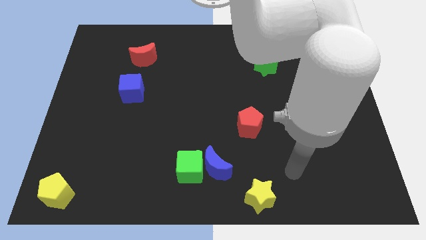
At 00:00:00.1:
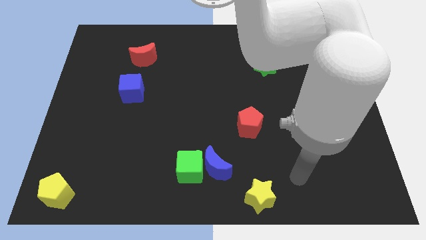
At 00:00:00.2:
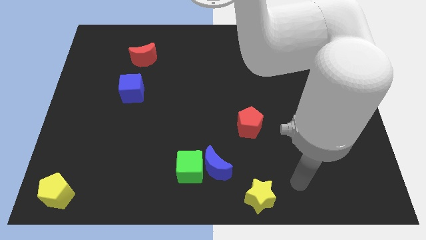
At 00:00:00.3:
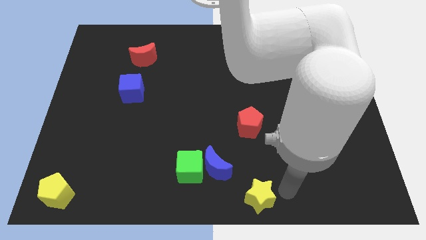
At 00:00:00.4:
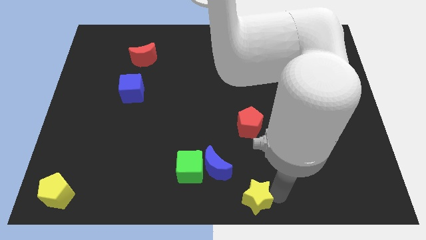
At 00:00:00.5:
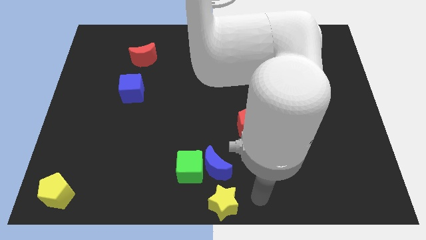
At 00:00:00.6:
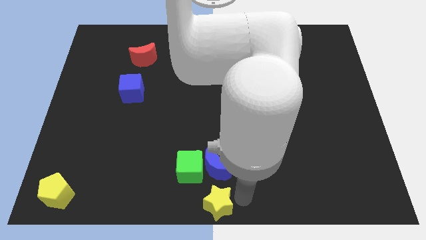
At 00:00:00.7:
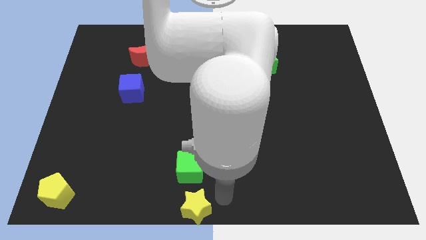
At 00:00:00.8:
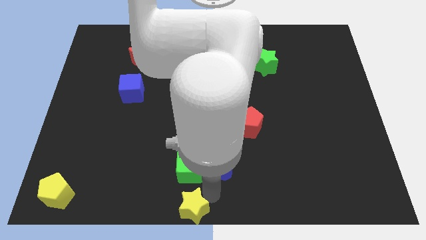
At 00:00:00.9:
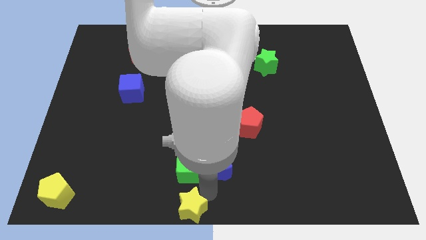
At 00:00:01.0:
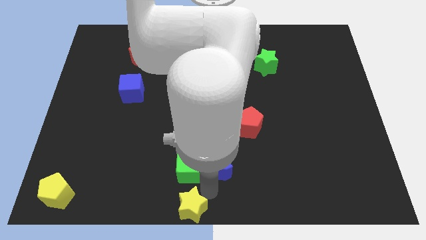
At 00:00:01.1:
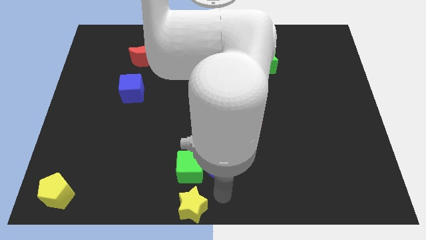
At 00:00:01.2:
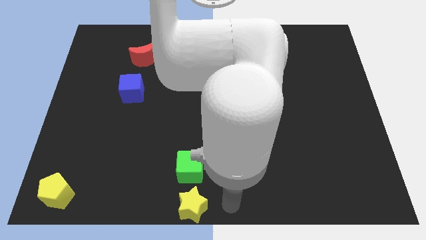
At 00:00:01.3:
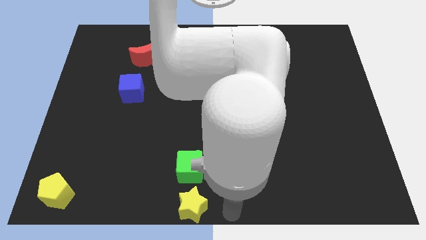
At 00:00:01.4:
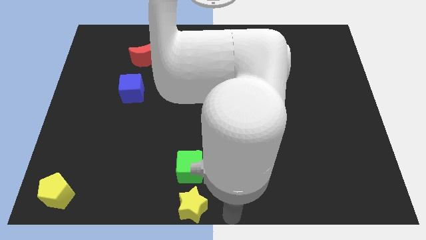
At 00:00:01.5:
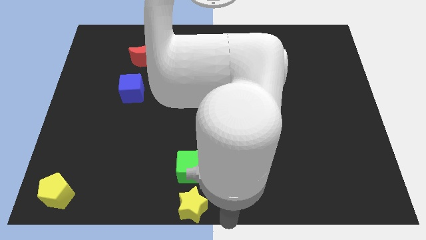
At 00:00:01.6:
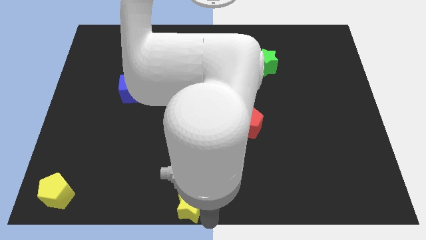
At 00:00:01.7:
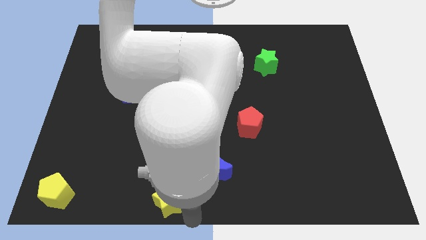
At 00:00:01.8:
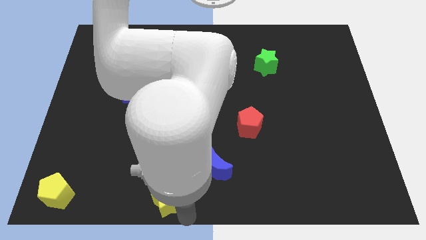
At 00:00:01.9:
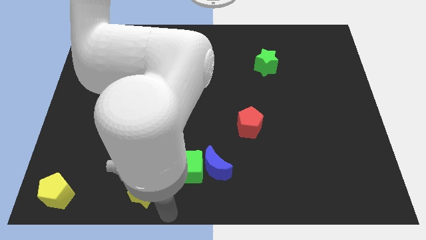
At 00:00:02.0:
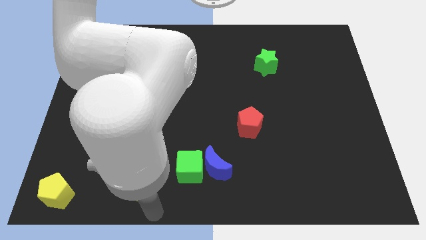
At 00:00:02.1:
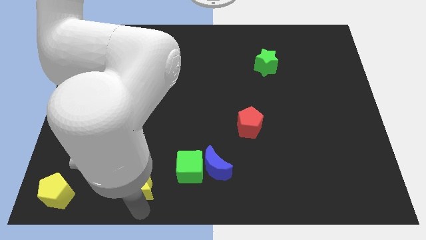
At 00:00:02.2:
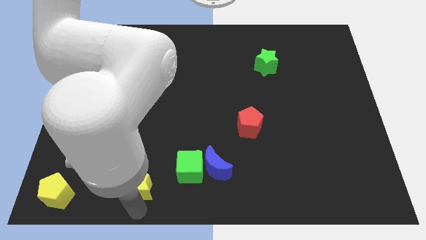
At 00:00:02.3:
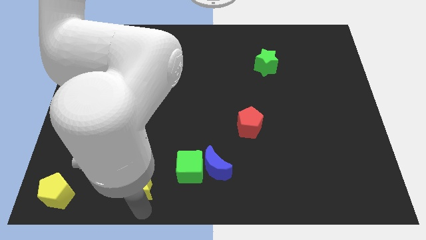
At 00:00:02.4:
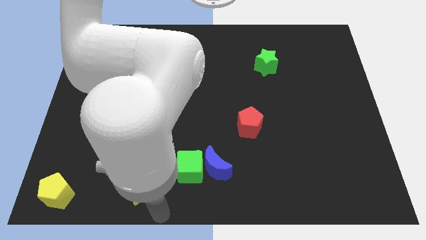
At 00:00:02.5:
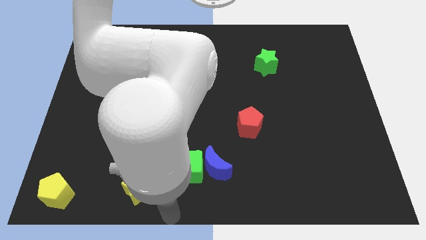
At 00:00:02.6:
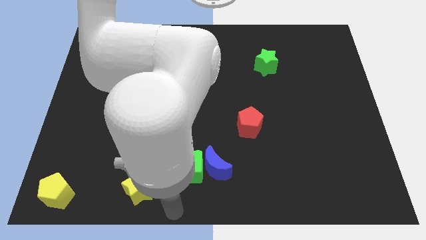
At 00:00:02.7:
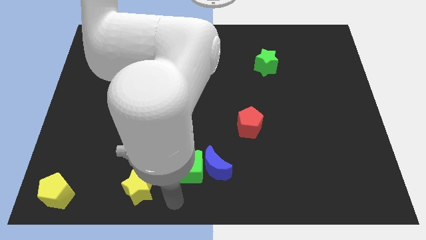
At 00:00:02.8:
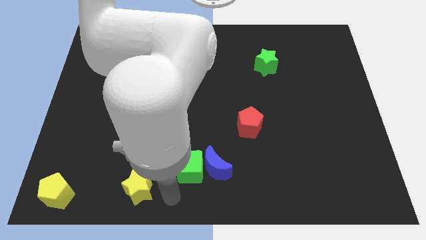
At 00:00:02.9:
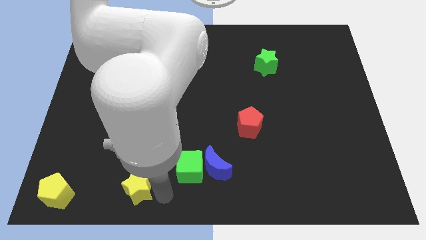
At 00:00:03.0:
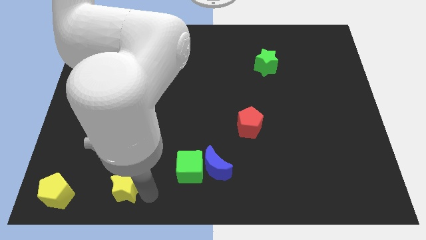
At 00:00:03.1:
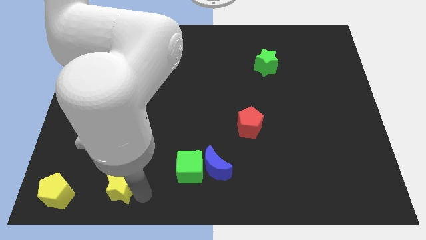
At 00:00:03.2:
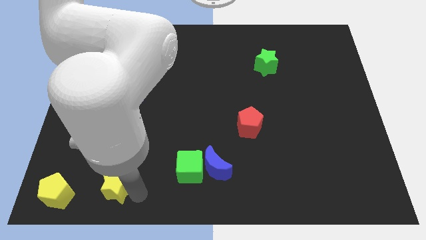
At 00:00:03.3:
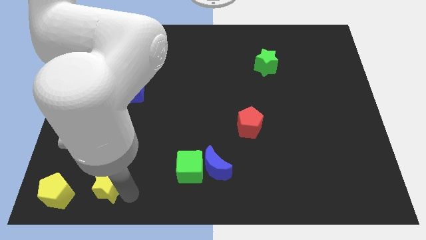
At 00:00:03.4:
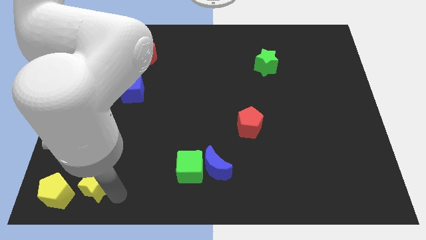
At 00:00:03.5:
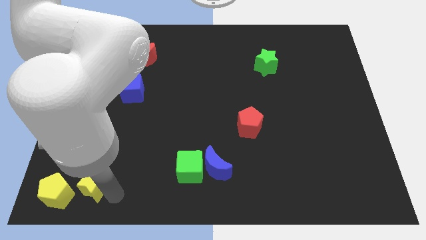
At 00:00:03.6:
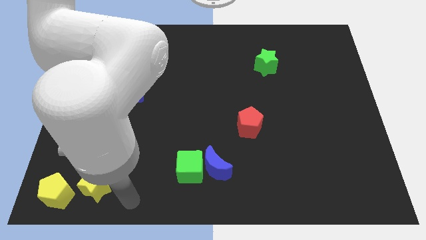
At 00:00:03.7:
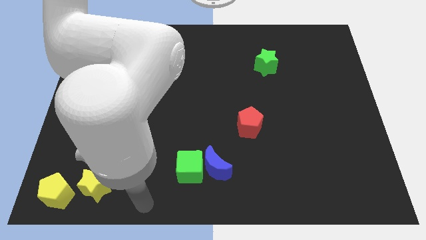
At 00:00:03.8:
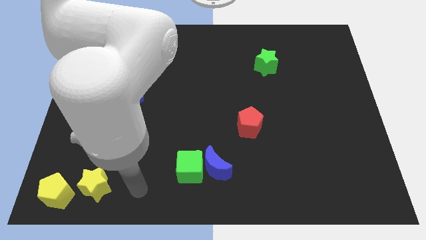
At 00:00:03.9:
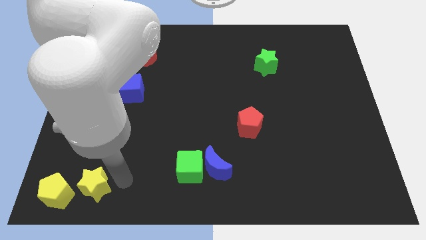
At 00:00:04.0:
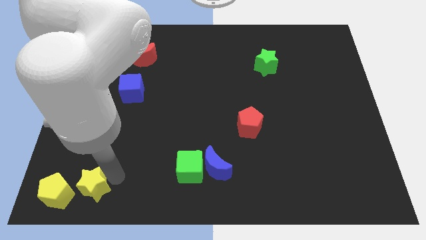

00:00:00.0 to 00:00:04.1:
place the yellow star right side to the yellow pentagon

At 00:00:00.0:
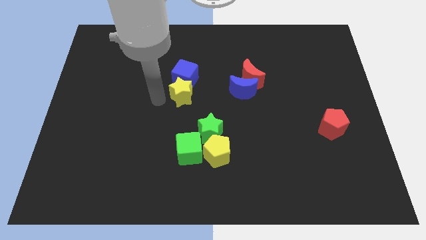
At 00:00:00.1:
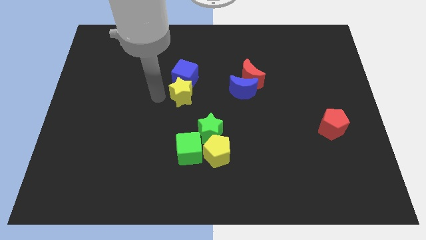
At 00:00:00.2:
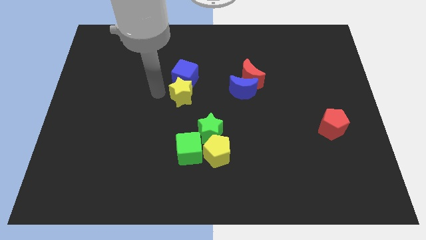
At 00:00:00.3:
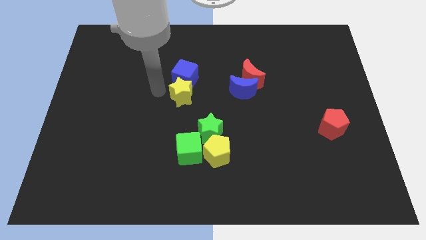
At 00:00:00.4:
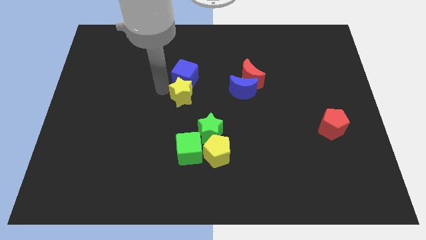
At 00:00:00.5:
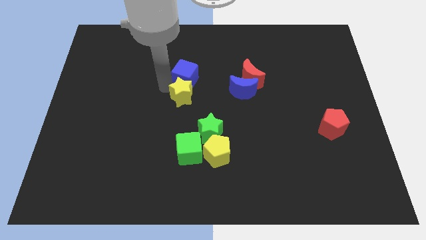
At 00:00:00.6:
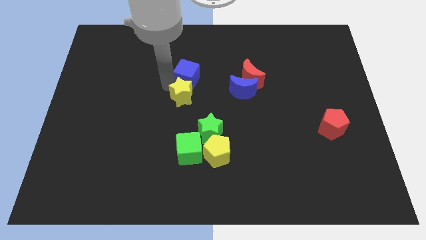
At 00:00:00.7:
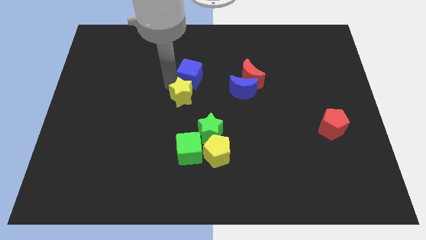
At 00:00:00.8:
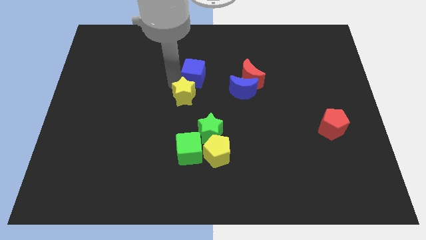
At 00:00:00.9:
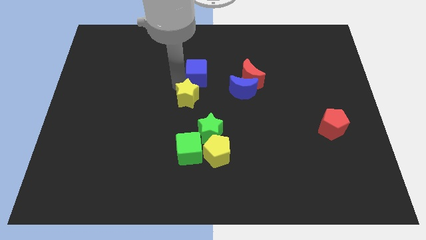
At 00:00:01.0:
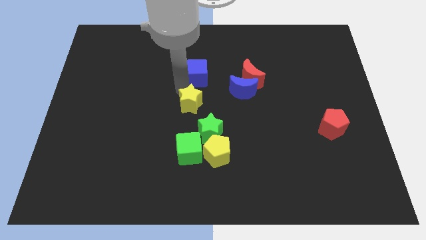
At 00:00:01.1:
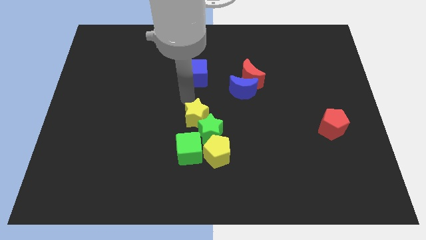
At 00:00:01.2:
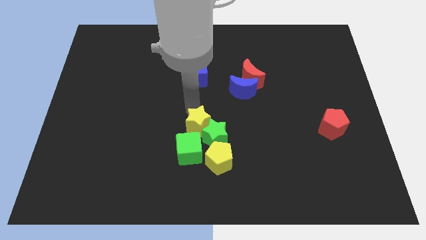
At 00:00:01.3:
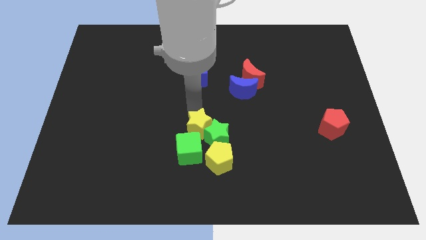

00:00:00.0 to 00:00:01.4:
push the yellow star into the green star from the top

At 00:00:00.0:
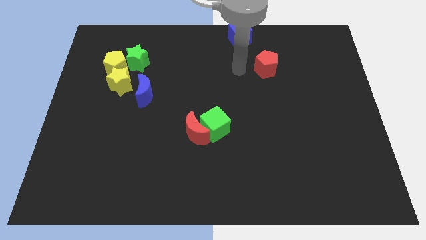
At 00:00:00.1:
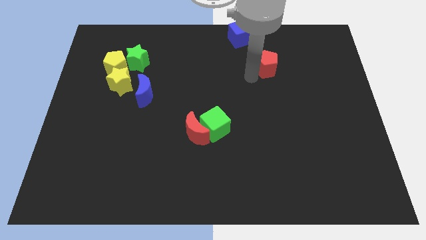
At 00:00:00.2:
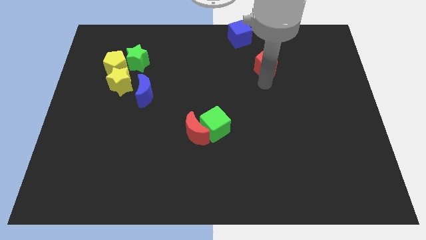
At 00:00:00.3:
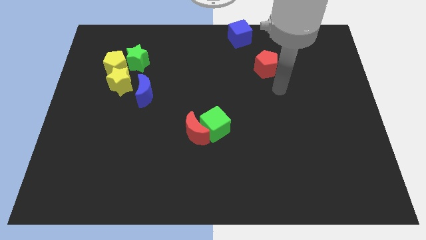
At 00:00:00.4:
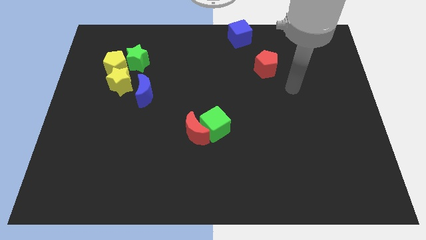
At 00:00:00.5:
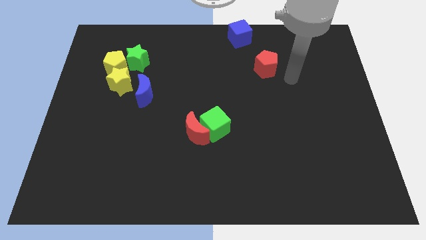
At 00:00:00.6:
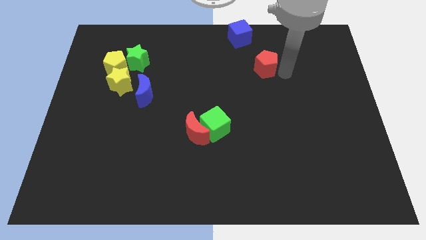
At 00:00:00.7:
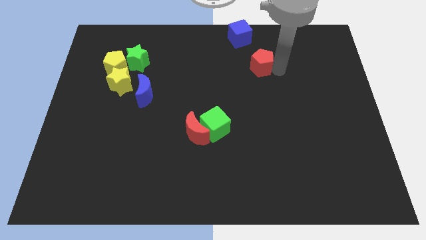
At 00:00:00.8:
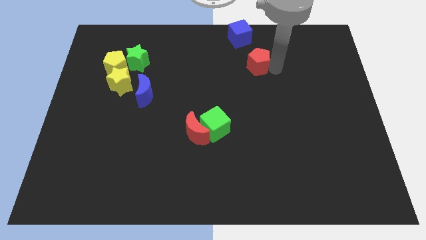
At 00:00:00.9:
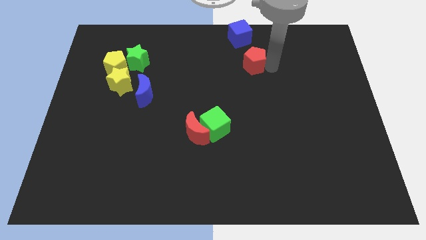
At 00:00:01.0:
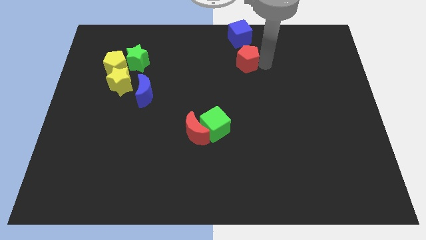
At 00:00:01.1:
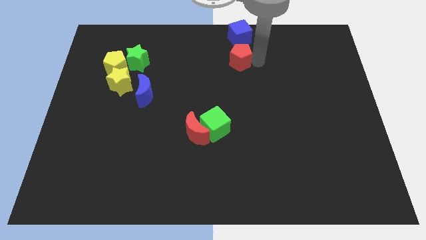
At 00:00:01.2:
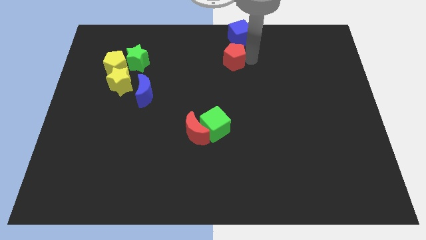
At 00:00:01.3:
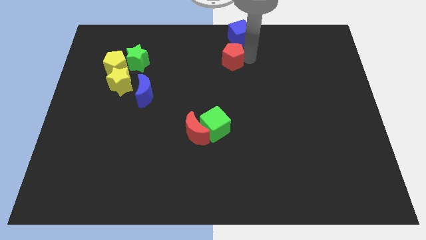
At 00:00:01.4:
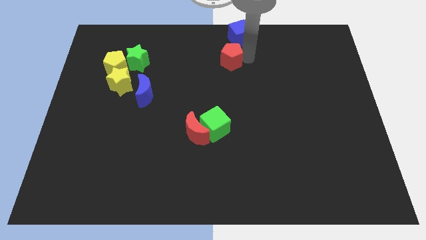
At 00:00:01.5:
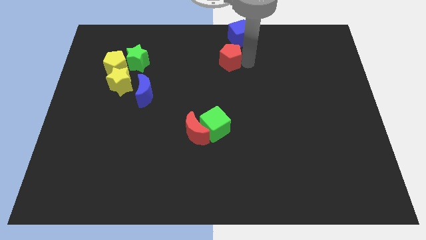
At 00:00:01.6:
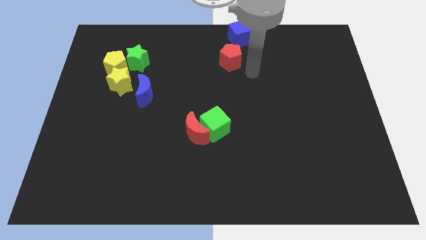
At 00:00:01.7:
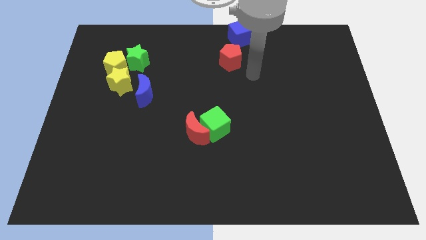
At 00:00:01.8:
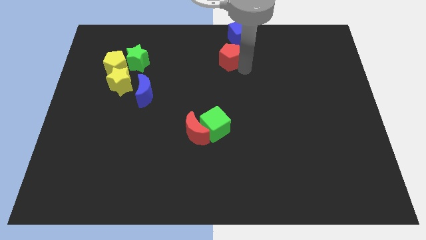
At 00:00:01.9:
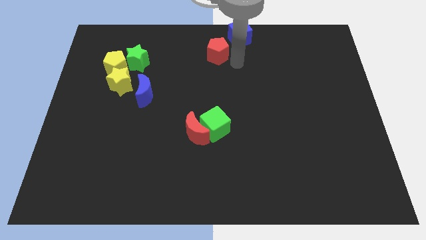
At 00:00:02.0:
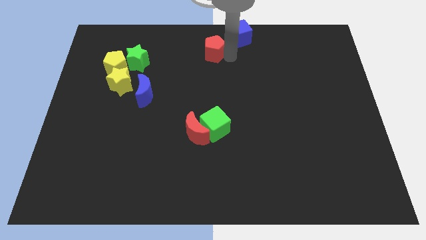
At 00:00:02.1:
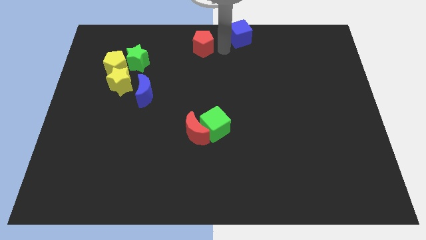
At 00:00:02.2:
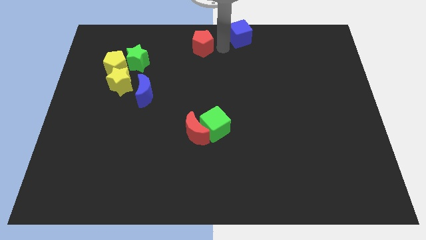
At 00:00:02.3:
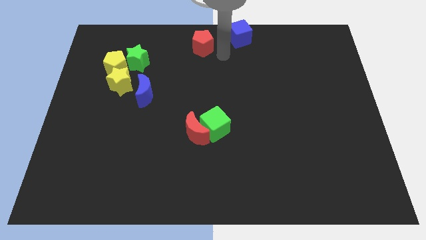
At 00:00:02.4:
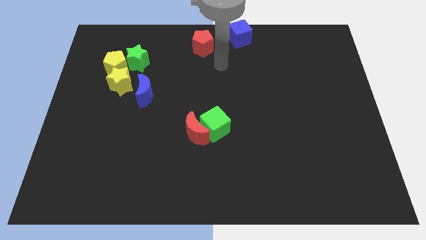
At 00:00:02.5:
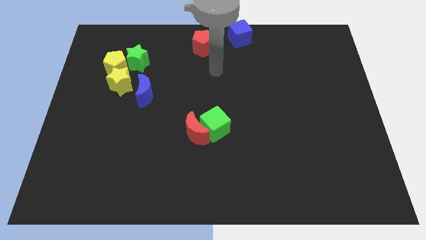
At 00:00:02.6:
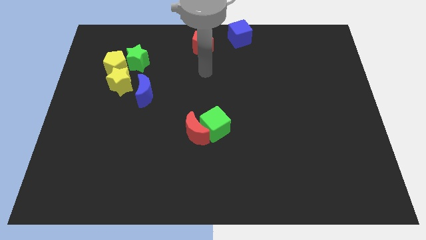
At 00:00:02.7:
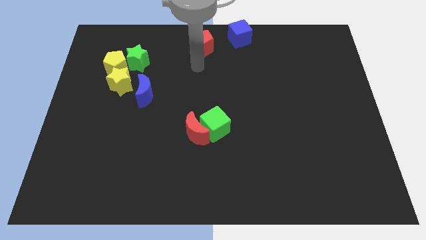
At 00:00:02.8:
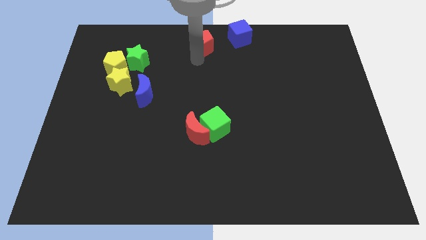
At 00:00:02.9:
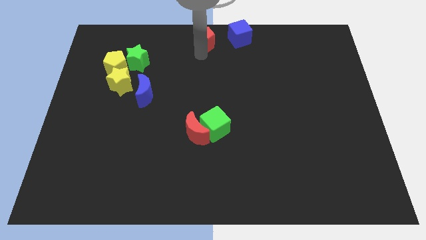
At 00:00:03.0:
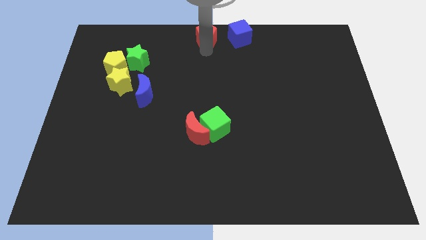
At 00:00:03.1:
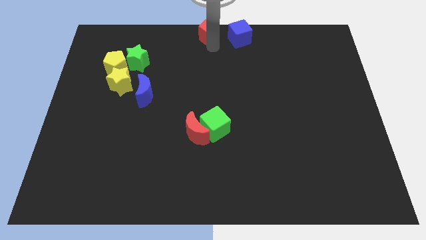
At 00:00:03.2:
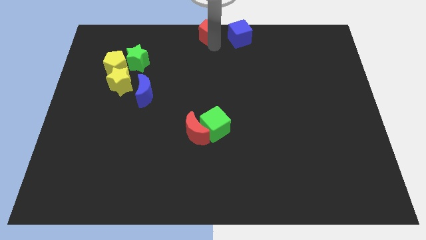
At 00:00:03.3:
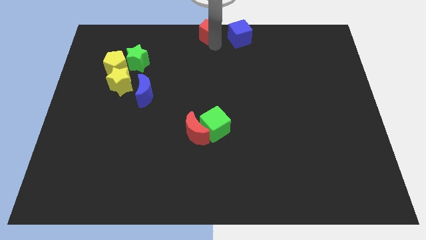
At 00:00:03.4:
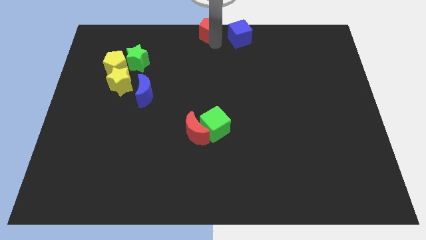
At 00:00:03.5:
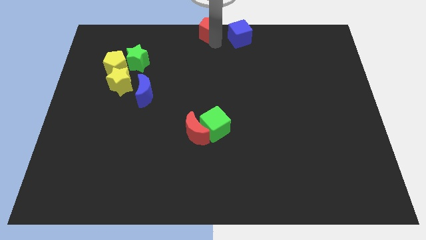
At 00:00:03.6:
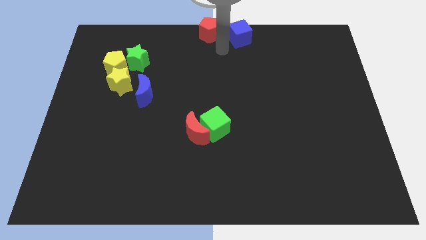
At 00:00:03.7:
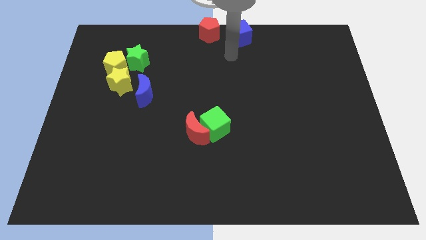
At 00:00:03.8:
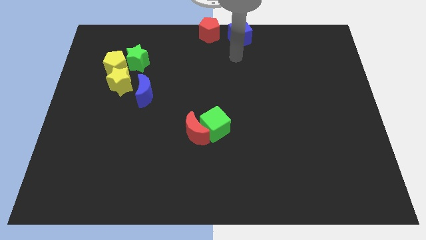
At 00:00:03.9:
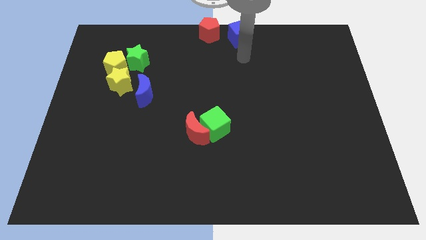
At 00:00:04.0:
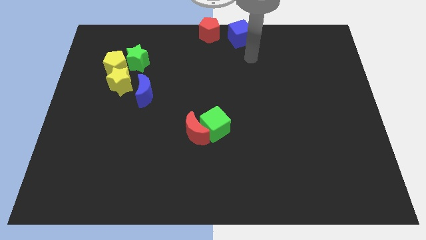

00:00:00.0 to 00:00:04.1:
push the red pentagon to the top center
